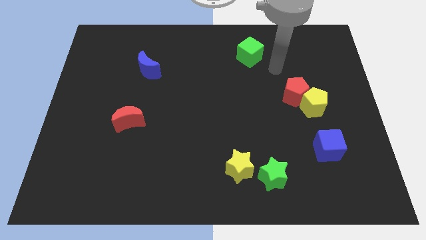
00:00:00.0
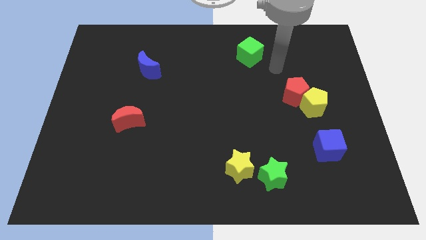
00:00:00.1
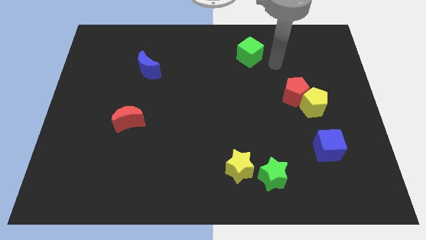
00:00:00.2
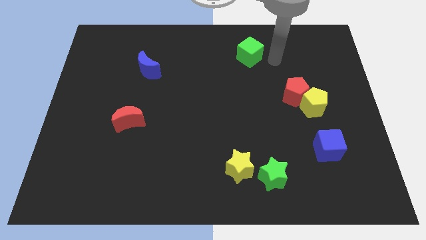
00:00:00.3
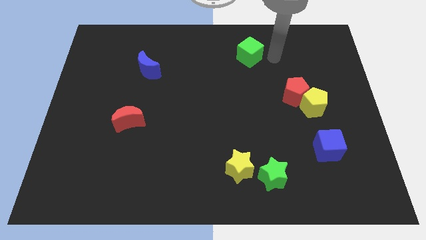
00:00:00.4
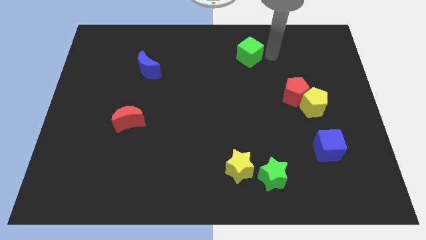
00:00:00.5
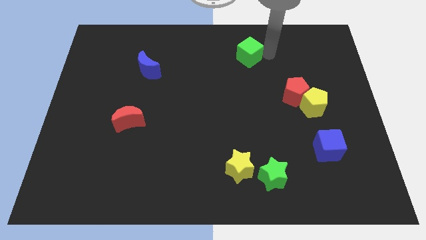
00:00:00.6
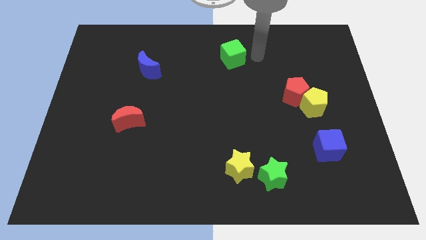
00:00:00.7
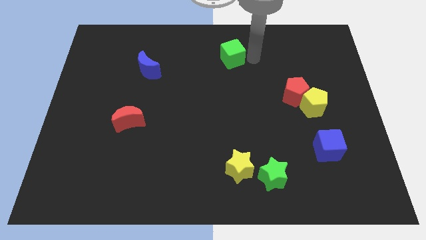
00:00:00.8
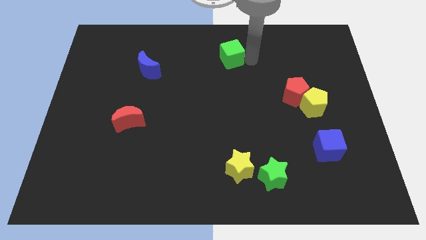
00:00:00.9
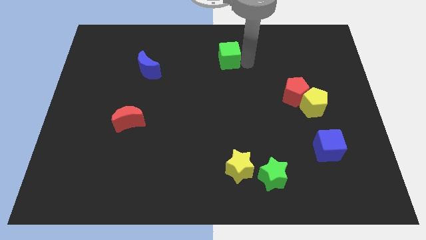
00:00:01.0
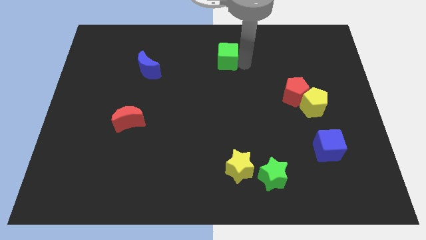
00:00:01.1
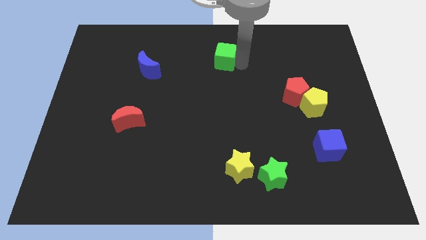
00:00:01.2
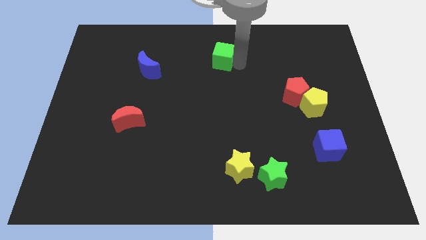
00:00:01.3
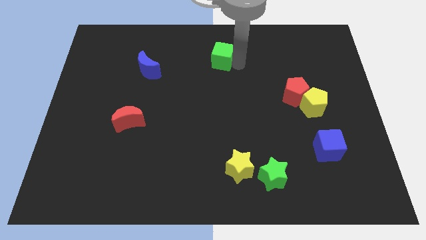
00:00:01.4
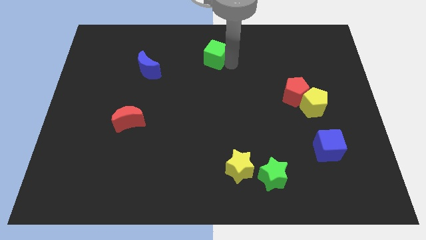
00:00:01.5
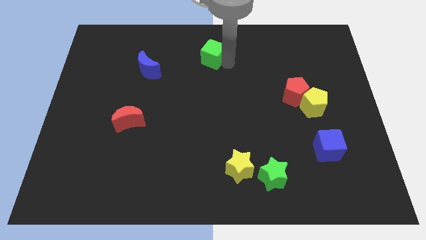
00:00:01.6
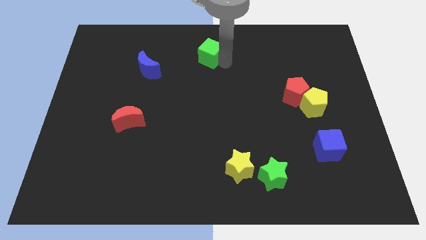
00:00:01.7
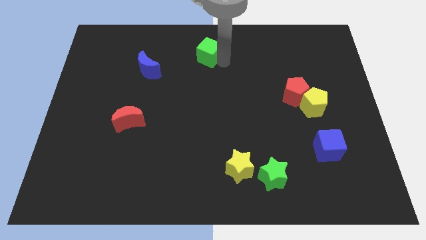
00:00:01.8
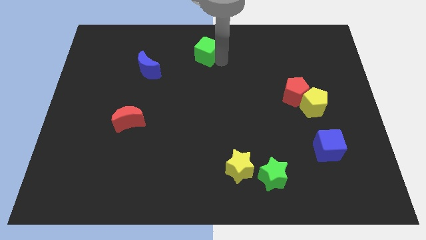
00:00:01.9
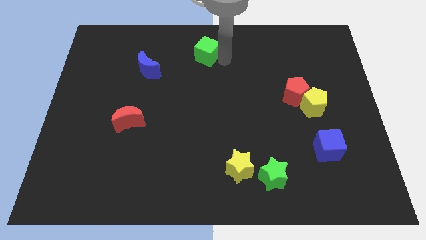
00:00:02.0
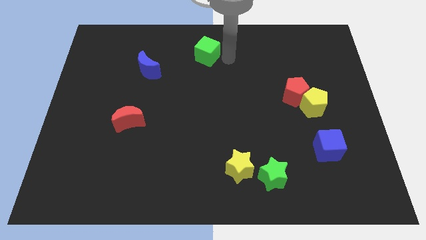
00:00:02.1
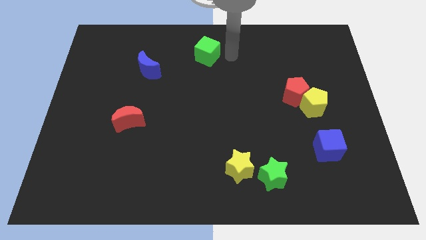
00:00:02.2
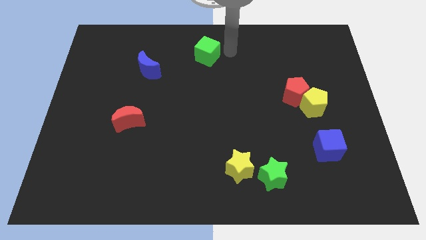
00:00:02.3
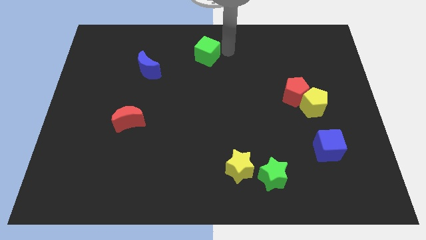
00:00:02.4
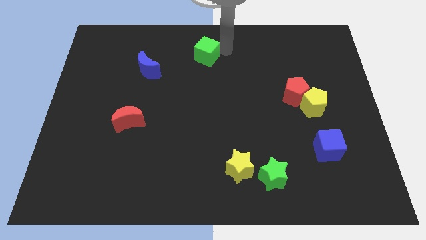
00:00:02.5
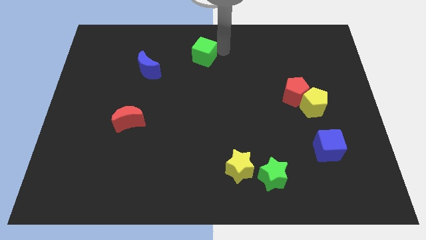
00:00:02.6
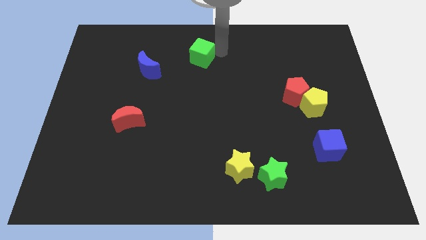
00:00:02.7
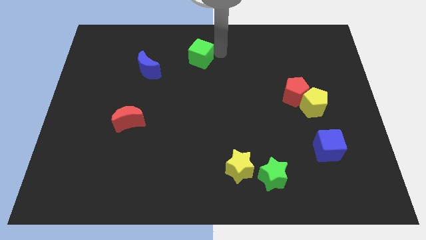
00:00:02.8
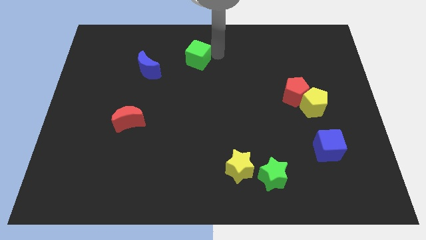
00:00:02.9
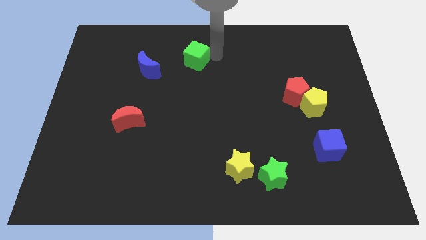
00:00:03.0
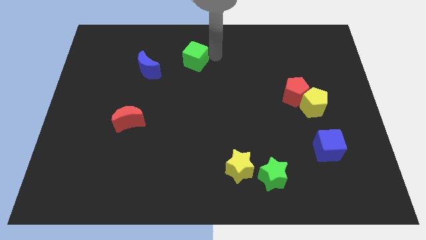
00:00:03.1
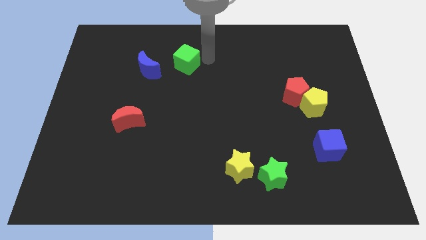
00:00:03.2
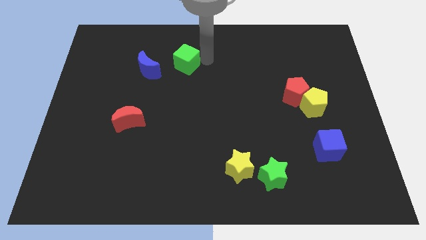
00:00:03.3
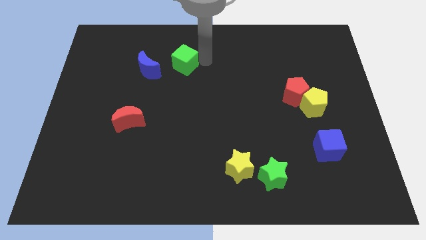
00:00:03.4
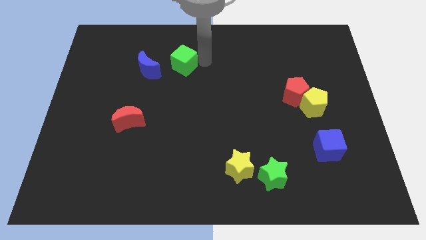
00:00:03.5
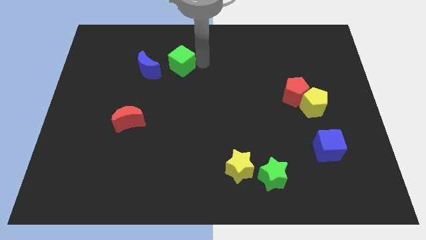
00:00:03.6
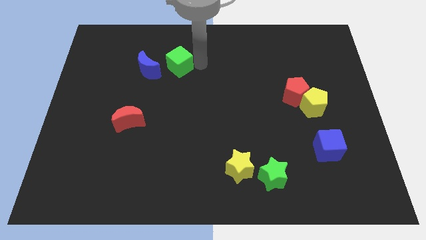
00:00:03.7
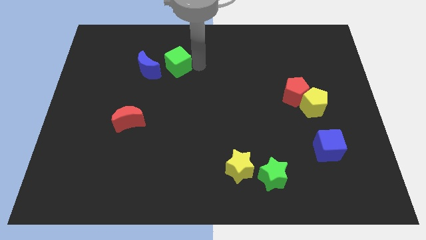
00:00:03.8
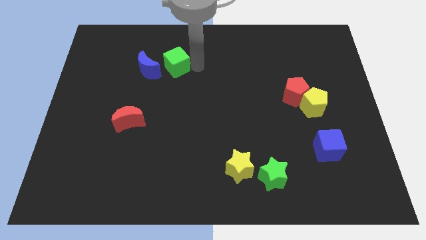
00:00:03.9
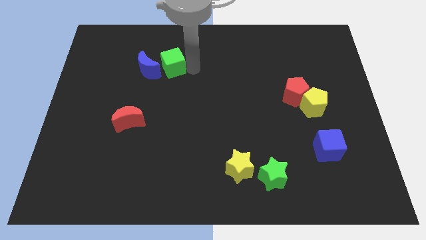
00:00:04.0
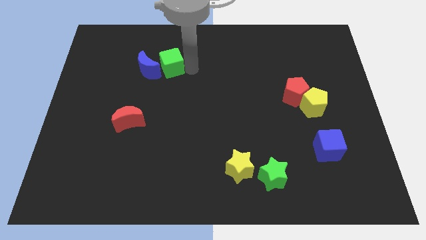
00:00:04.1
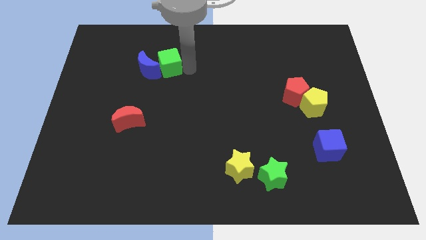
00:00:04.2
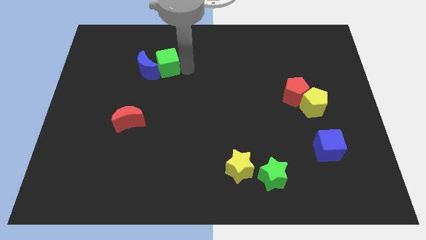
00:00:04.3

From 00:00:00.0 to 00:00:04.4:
put the green cube towards the blue moon

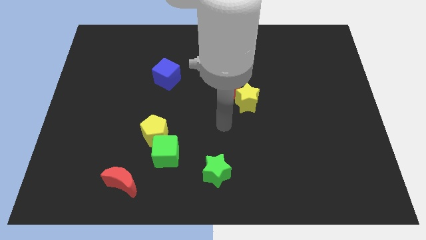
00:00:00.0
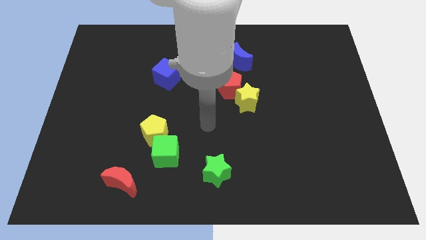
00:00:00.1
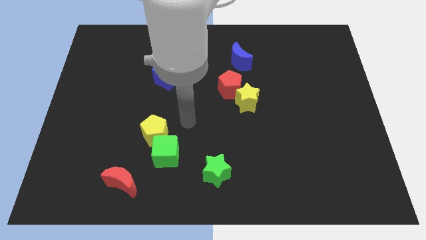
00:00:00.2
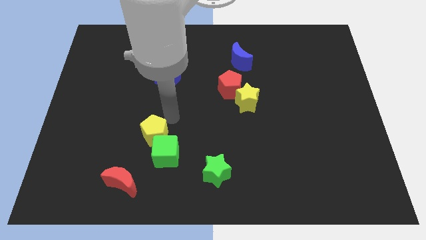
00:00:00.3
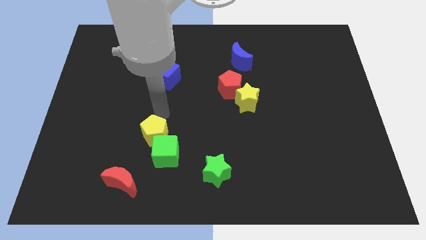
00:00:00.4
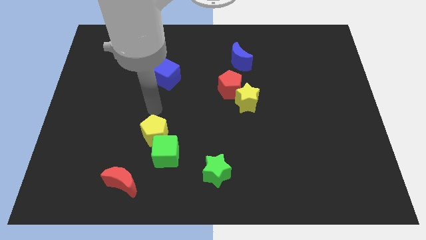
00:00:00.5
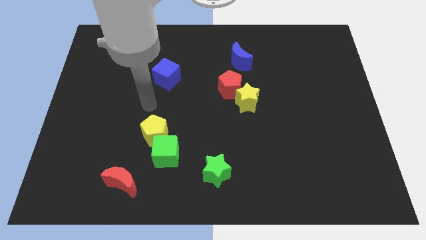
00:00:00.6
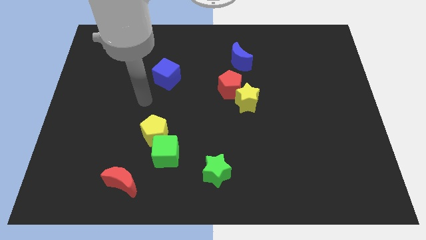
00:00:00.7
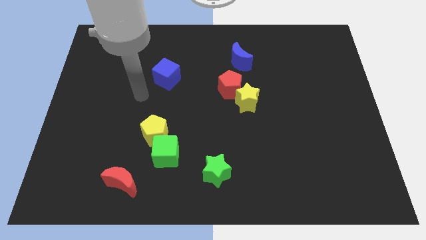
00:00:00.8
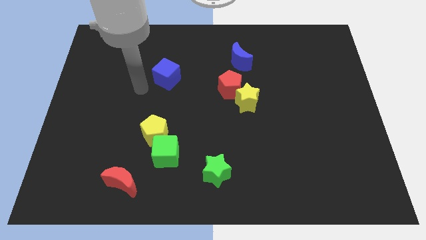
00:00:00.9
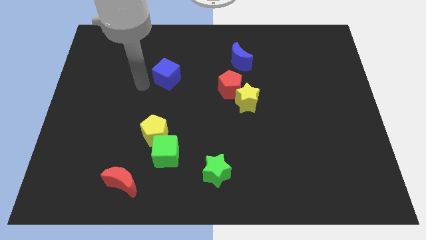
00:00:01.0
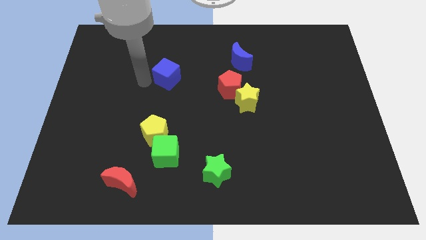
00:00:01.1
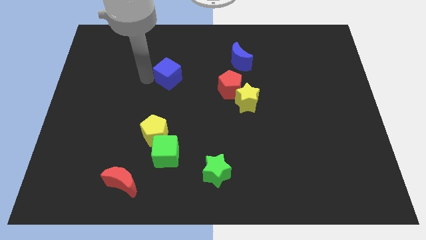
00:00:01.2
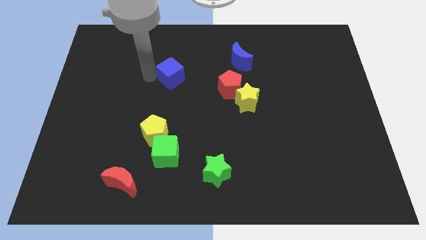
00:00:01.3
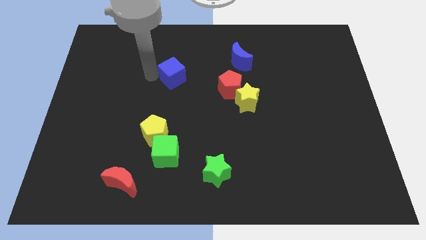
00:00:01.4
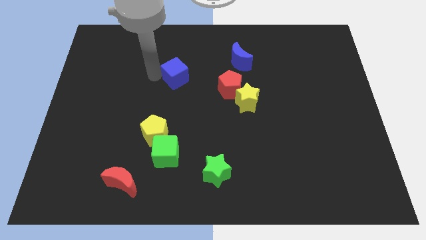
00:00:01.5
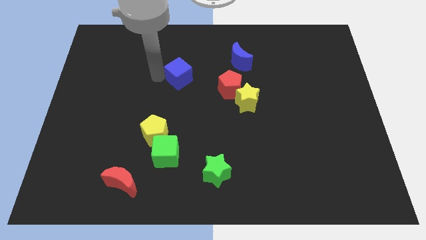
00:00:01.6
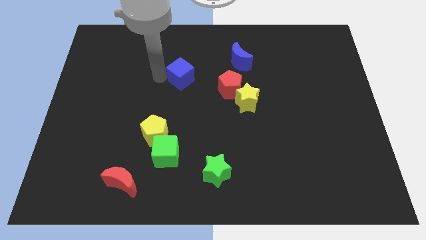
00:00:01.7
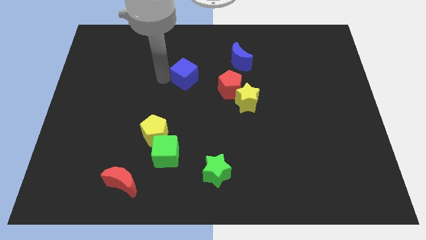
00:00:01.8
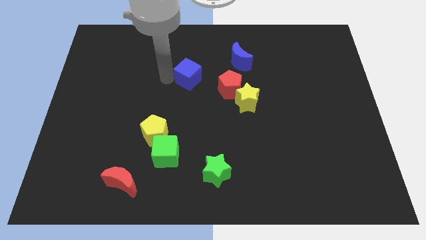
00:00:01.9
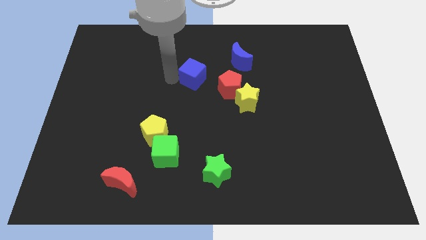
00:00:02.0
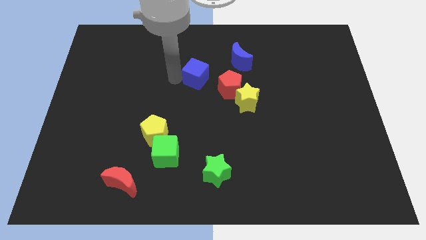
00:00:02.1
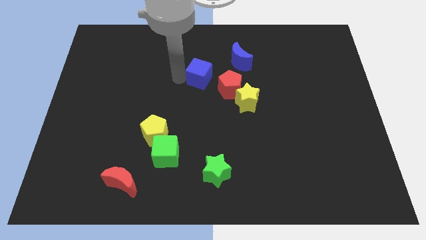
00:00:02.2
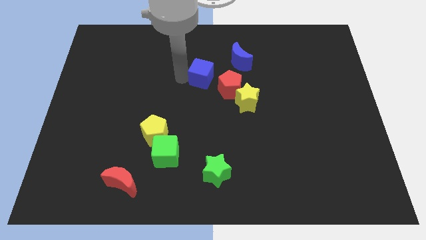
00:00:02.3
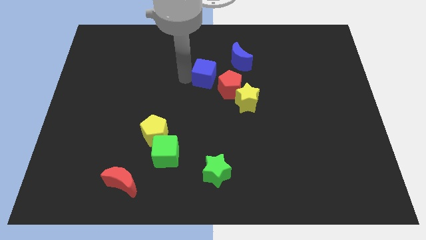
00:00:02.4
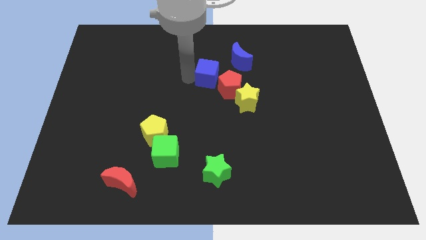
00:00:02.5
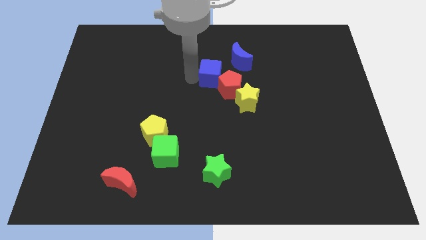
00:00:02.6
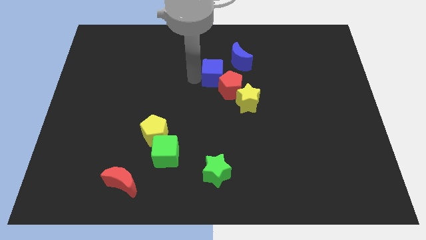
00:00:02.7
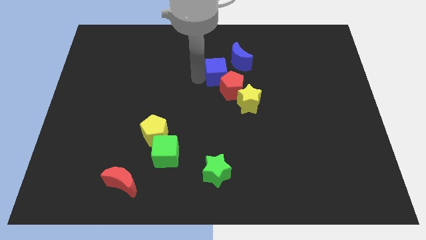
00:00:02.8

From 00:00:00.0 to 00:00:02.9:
move the blue cube to the red pentagon

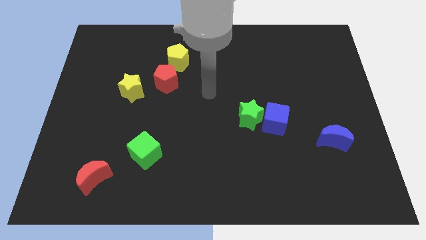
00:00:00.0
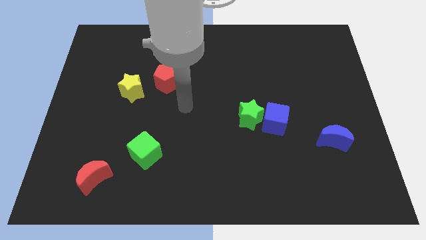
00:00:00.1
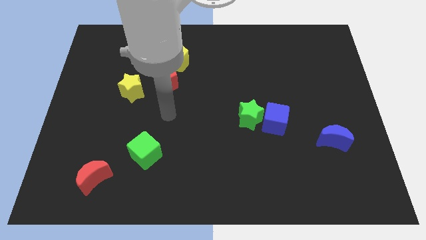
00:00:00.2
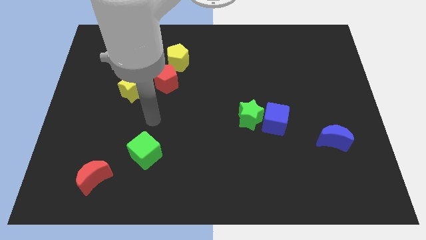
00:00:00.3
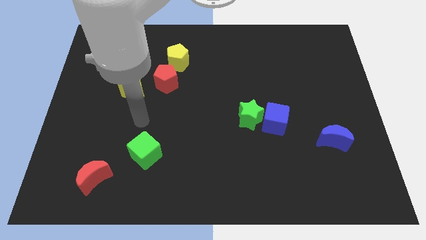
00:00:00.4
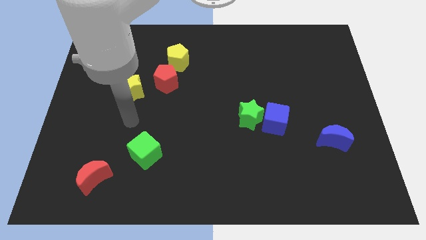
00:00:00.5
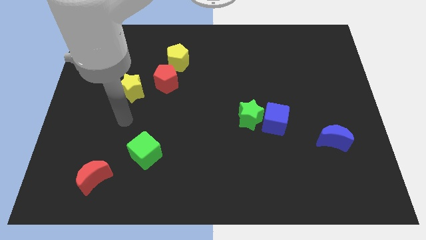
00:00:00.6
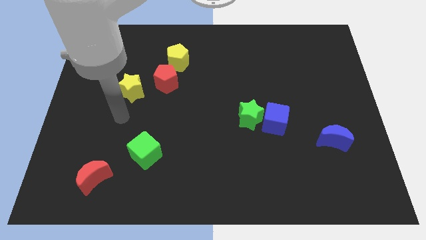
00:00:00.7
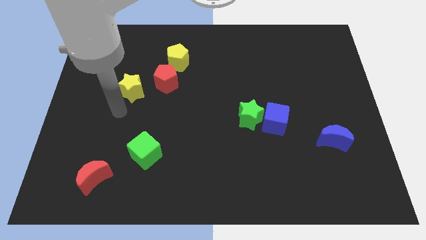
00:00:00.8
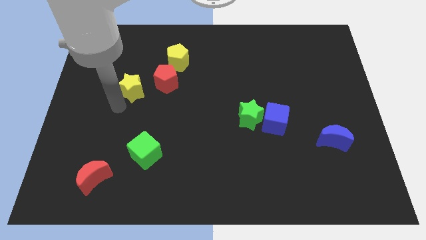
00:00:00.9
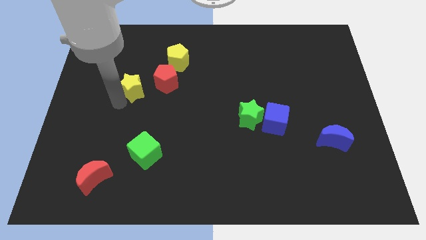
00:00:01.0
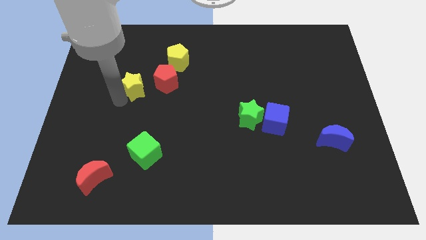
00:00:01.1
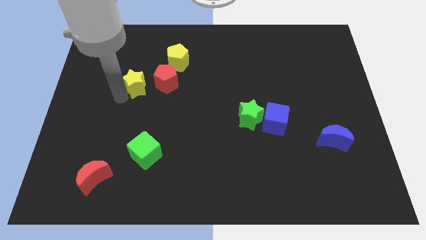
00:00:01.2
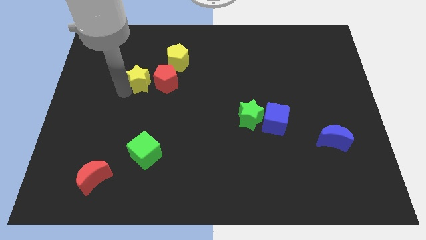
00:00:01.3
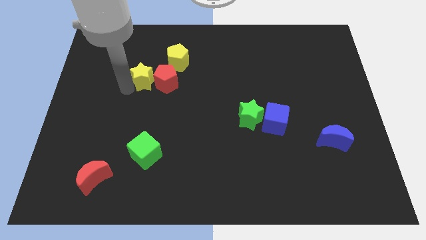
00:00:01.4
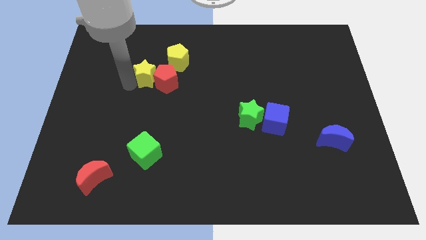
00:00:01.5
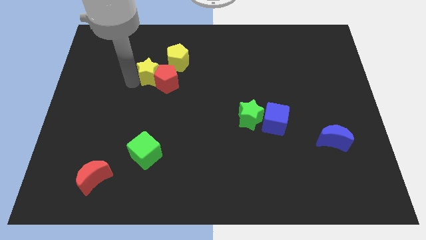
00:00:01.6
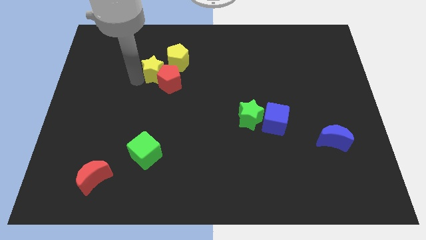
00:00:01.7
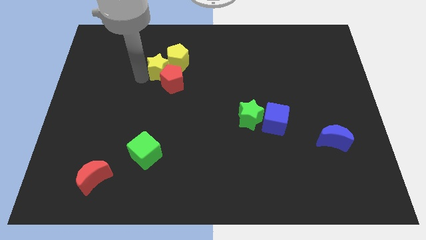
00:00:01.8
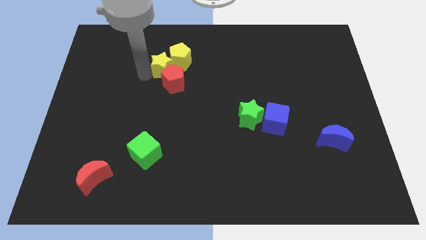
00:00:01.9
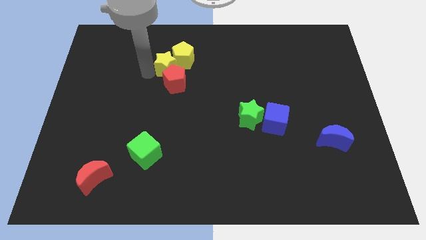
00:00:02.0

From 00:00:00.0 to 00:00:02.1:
slide the yellow star towards the yellow pentagon
